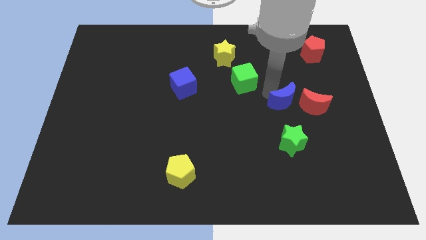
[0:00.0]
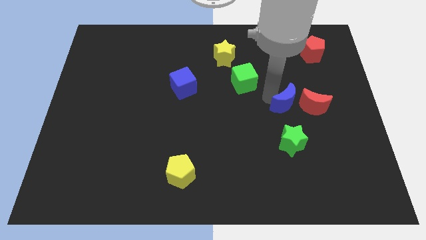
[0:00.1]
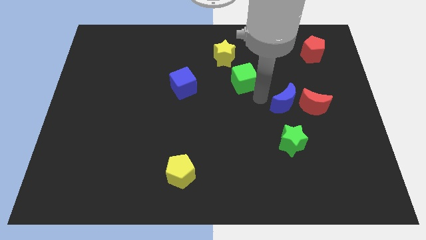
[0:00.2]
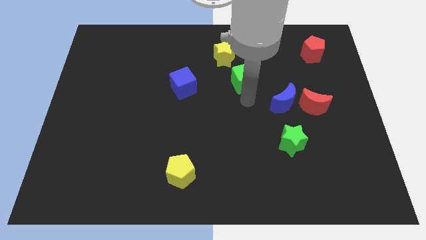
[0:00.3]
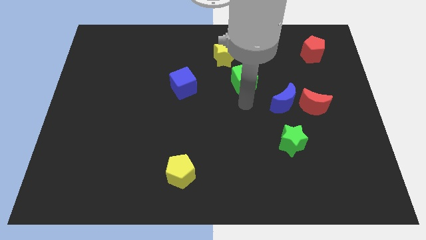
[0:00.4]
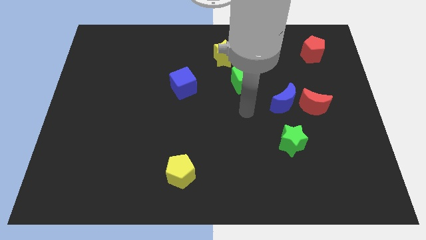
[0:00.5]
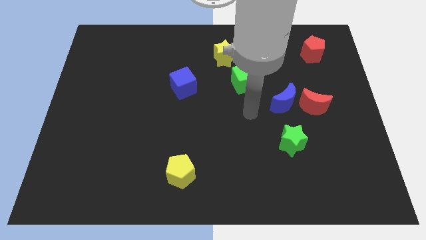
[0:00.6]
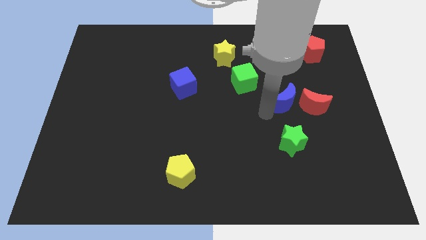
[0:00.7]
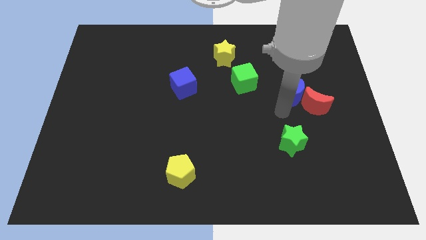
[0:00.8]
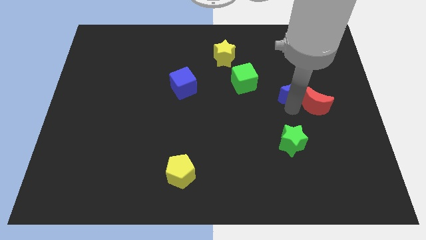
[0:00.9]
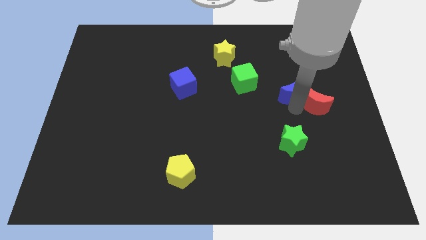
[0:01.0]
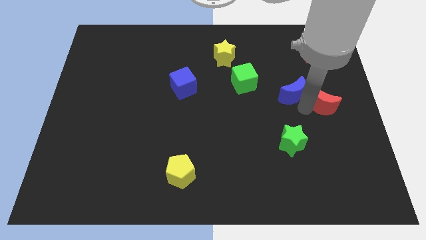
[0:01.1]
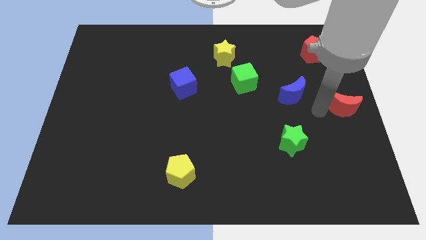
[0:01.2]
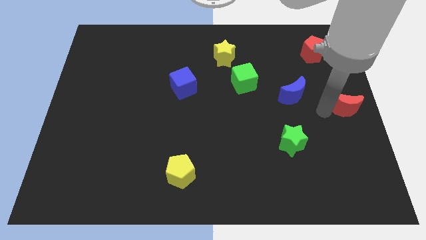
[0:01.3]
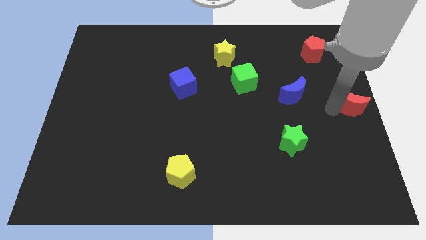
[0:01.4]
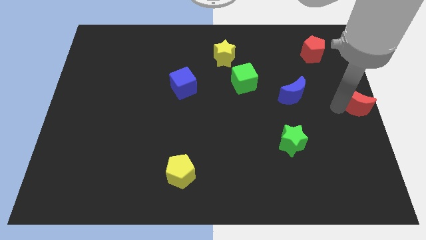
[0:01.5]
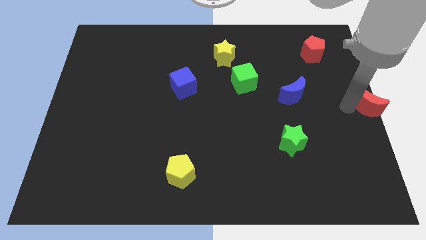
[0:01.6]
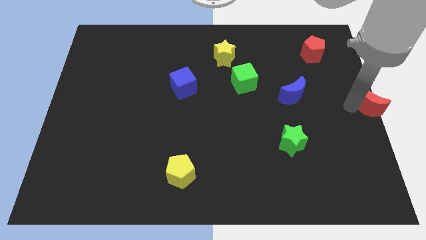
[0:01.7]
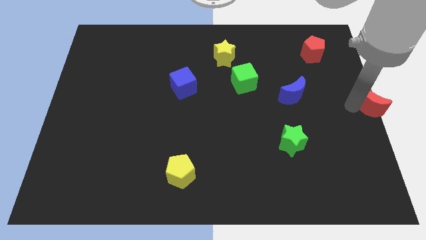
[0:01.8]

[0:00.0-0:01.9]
slide the red moon to the center right

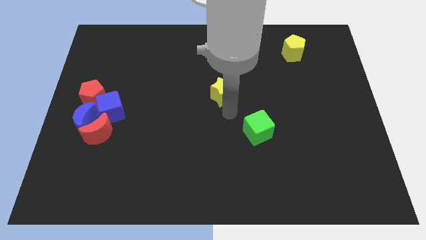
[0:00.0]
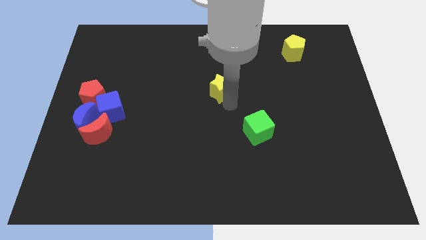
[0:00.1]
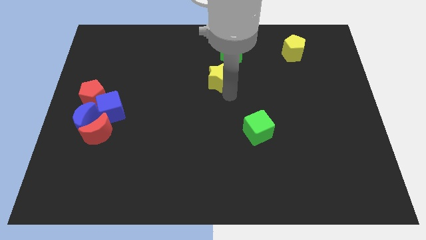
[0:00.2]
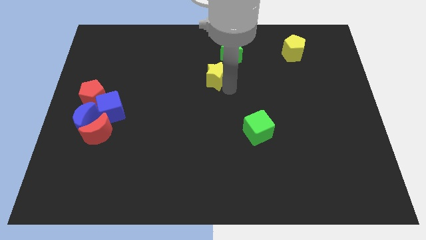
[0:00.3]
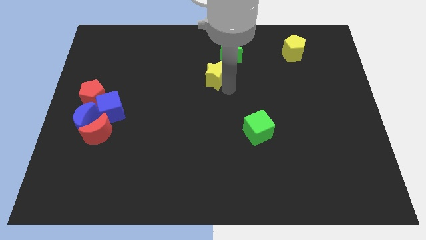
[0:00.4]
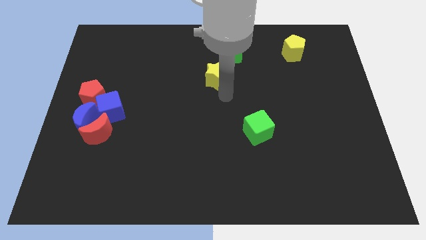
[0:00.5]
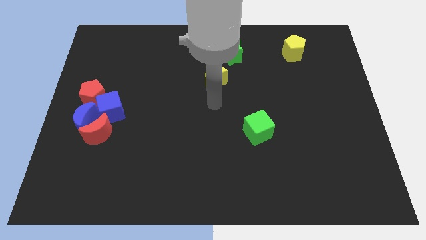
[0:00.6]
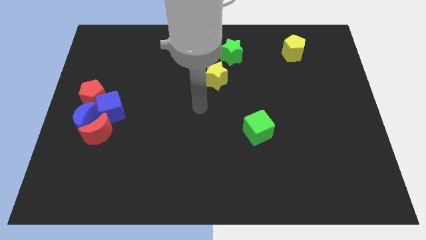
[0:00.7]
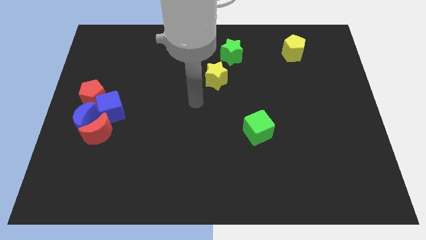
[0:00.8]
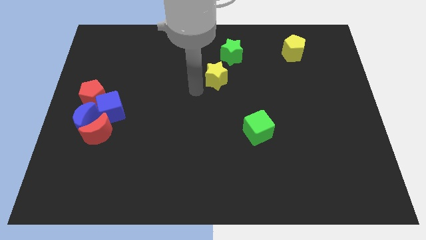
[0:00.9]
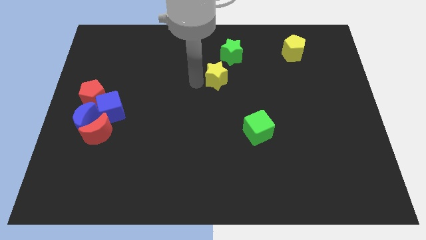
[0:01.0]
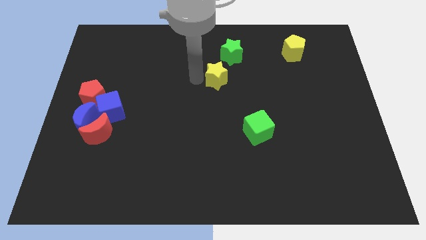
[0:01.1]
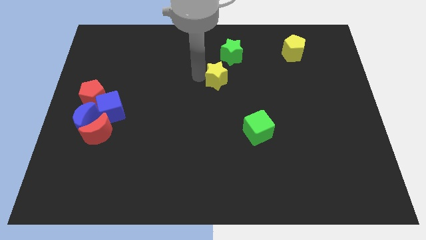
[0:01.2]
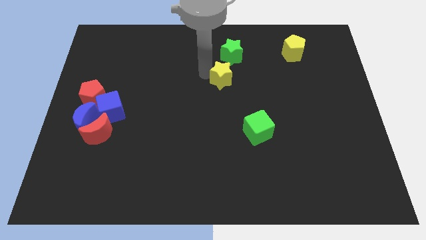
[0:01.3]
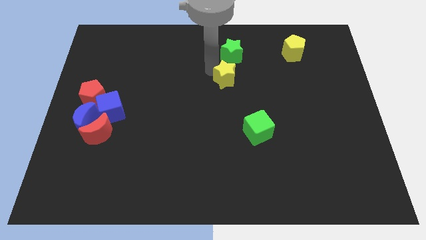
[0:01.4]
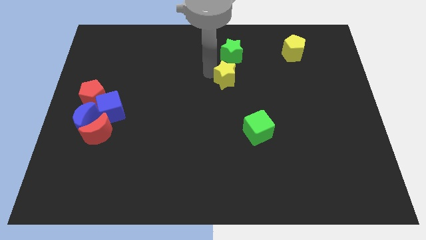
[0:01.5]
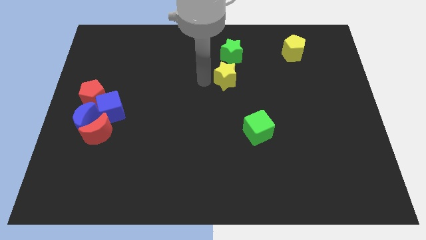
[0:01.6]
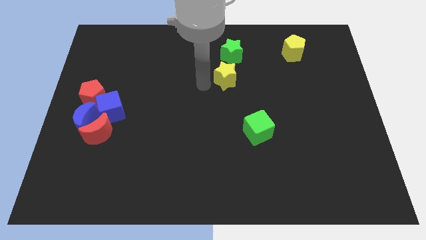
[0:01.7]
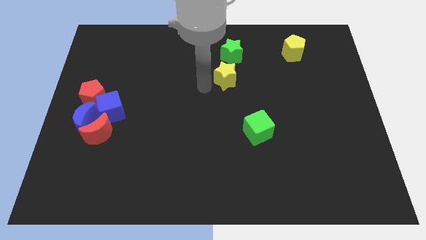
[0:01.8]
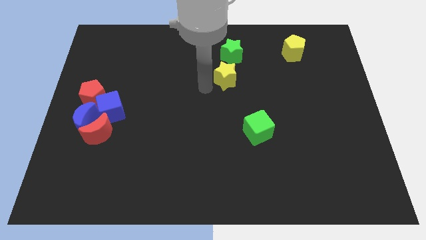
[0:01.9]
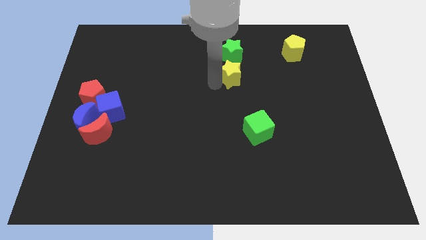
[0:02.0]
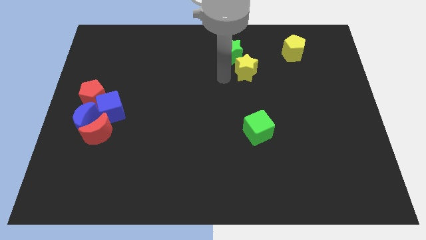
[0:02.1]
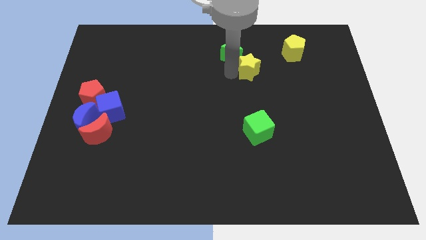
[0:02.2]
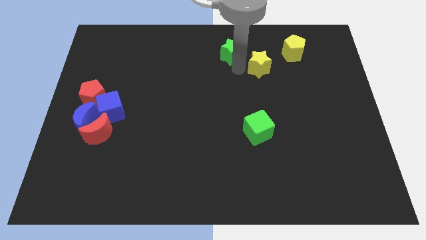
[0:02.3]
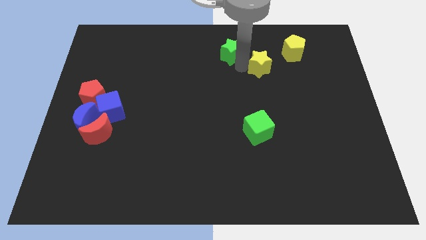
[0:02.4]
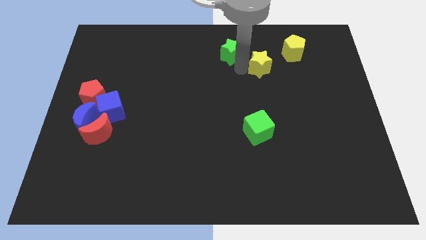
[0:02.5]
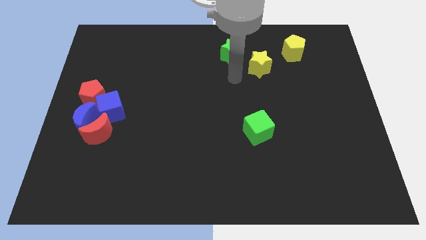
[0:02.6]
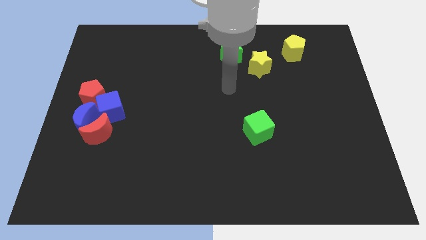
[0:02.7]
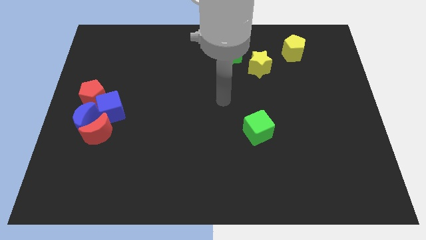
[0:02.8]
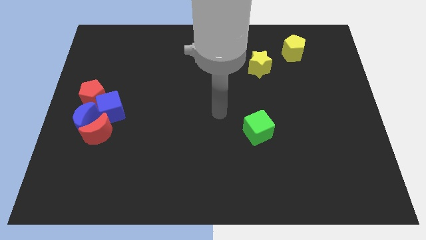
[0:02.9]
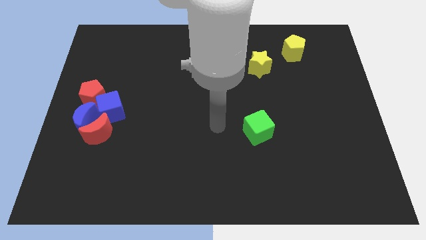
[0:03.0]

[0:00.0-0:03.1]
move the yellow star towards the bottom right side of the green star

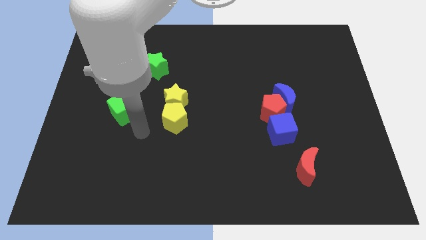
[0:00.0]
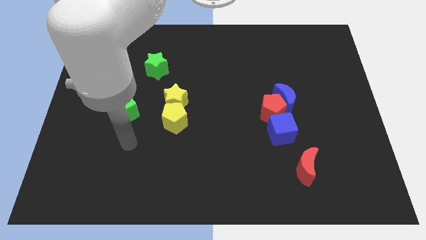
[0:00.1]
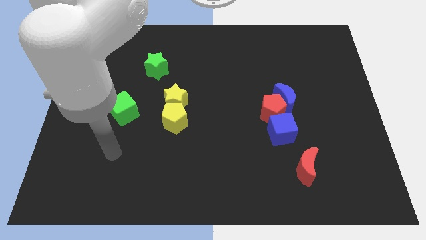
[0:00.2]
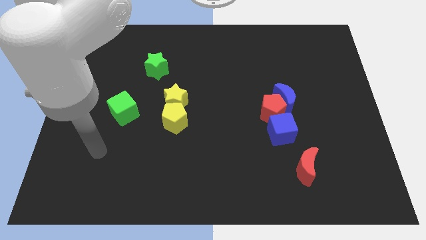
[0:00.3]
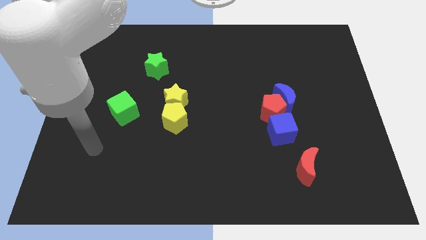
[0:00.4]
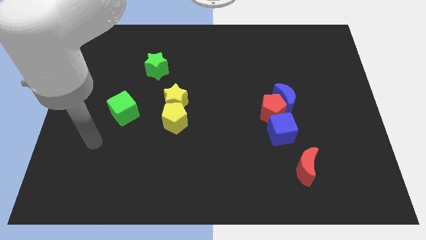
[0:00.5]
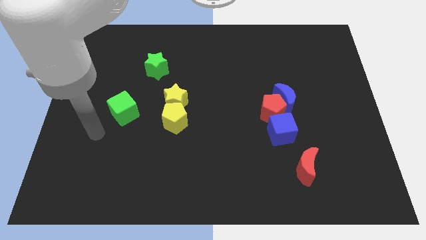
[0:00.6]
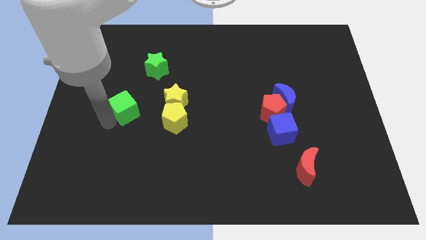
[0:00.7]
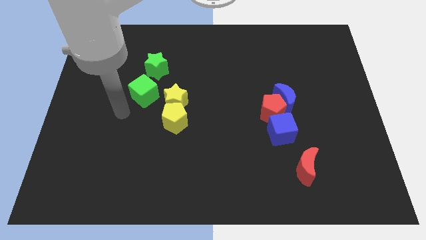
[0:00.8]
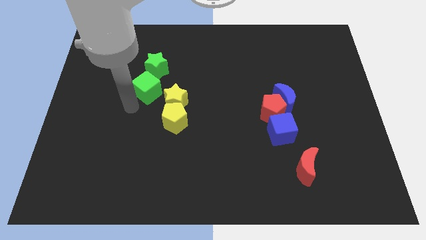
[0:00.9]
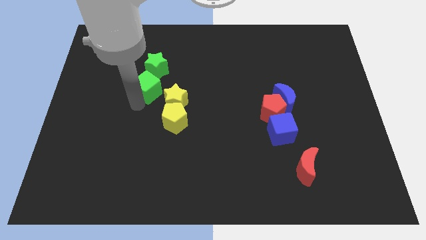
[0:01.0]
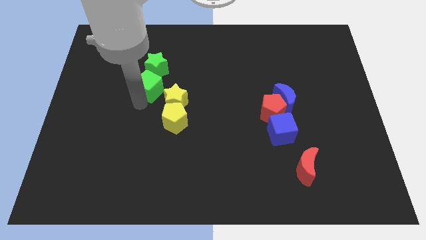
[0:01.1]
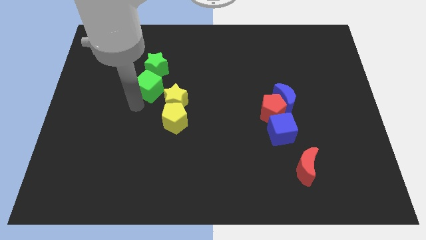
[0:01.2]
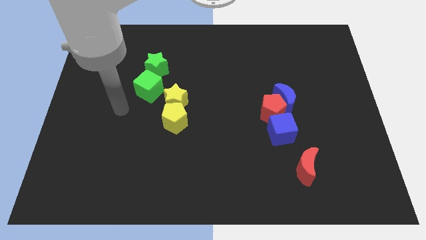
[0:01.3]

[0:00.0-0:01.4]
move the green cube into the green star

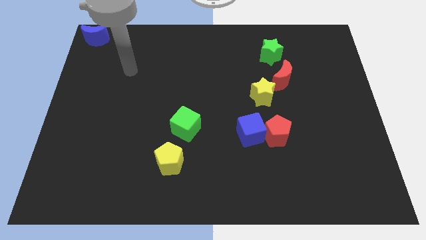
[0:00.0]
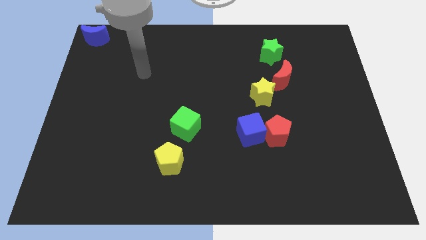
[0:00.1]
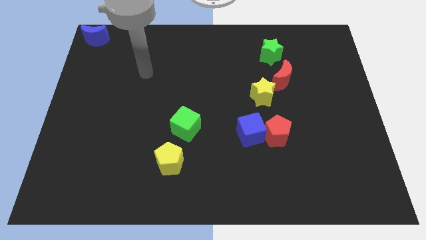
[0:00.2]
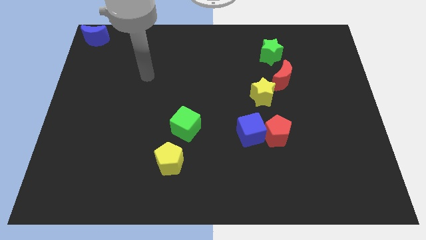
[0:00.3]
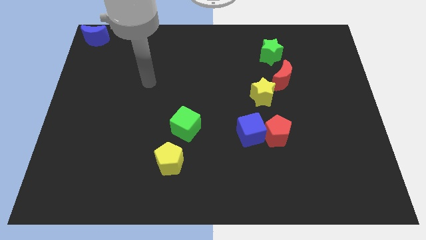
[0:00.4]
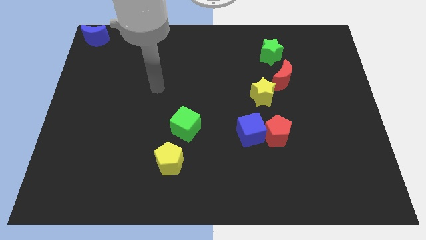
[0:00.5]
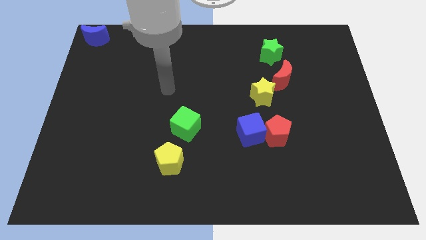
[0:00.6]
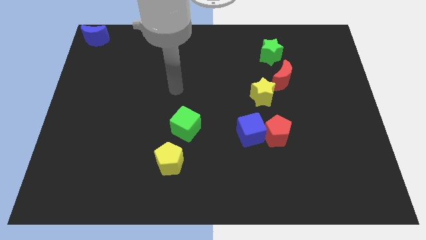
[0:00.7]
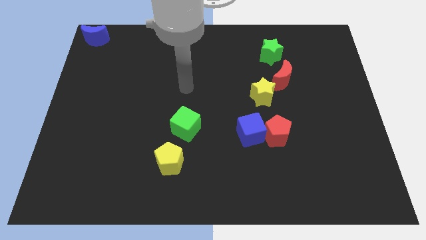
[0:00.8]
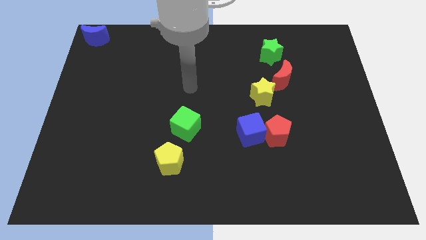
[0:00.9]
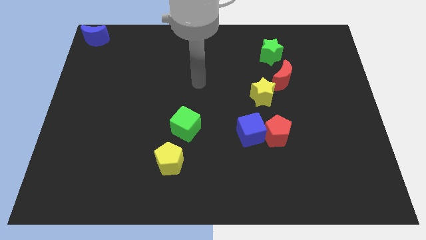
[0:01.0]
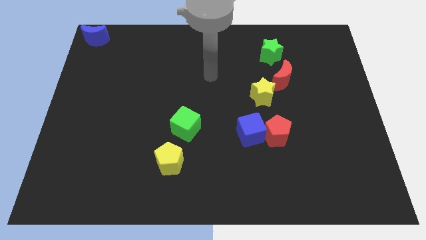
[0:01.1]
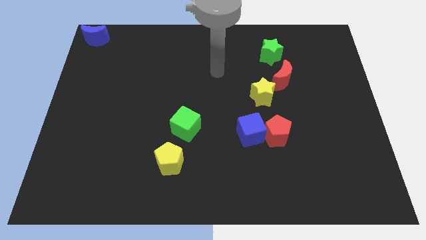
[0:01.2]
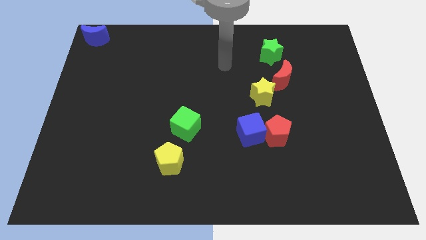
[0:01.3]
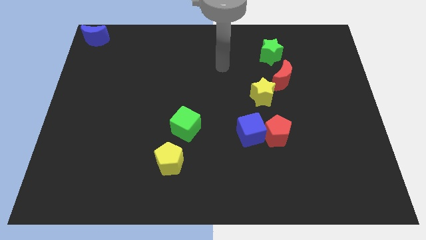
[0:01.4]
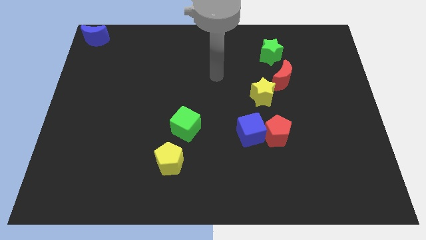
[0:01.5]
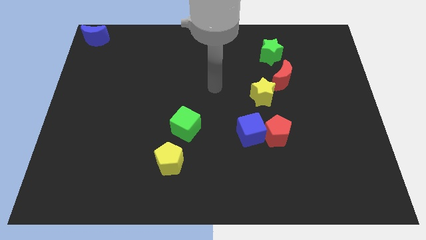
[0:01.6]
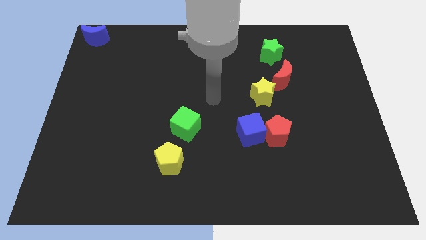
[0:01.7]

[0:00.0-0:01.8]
move your arm to the center of the board

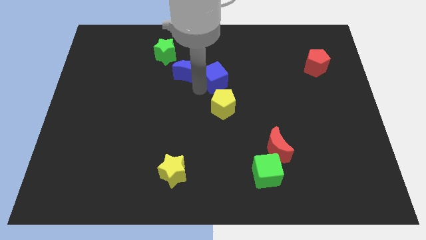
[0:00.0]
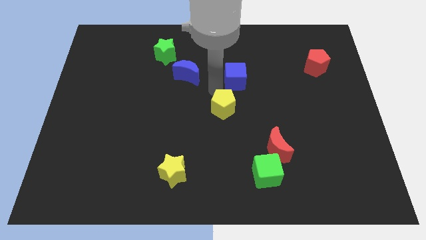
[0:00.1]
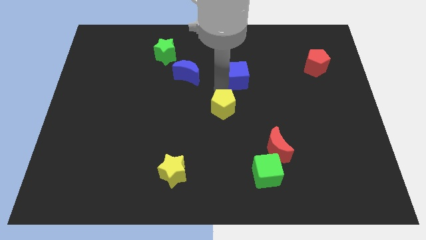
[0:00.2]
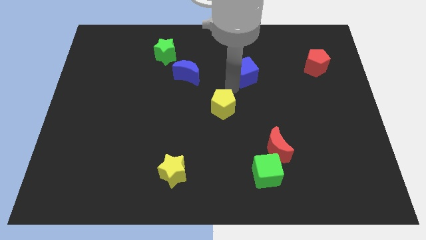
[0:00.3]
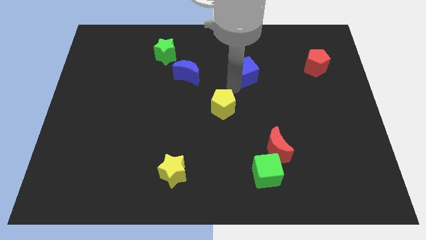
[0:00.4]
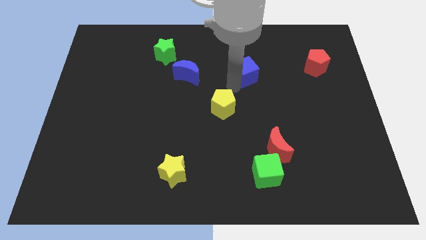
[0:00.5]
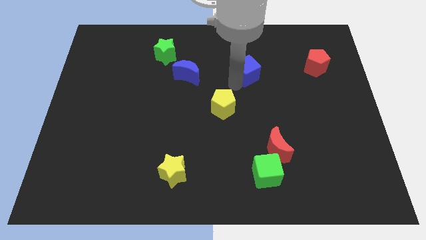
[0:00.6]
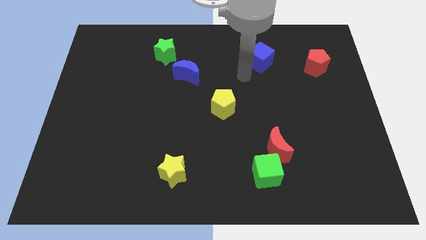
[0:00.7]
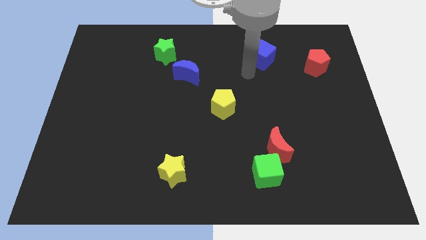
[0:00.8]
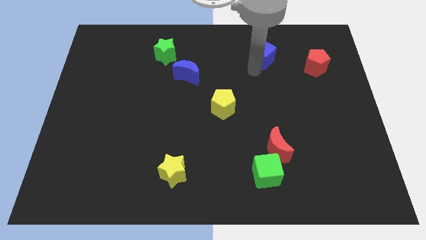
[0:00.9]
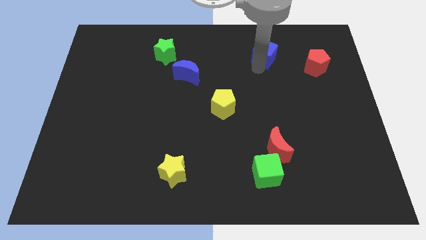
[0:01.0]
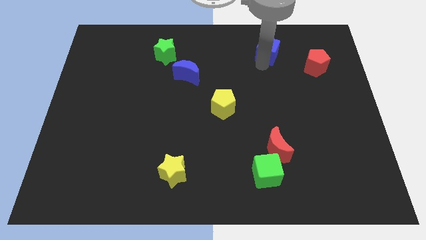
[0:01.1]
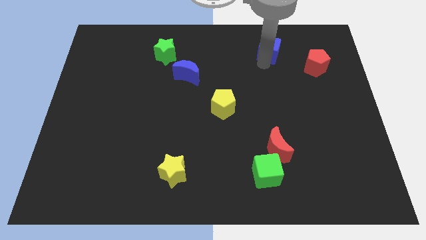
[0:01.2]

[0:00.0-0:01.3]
move the blue block slightly towards upwards of the sheet
